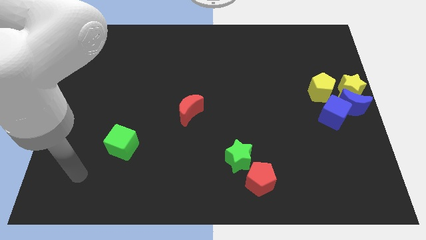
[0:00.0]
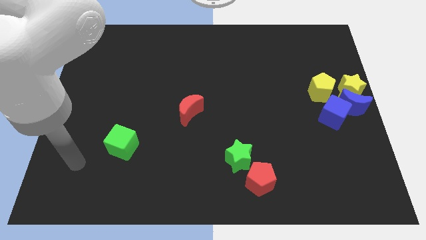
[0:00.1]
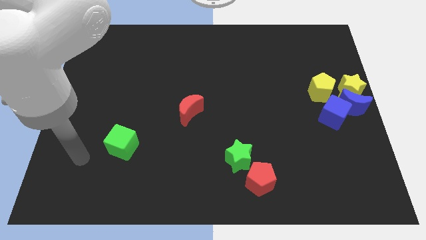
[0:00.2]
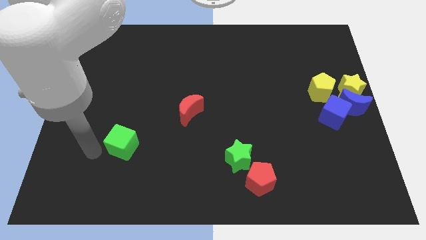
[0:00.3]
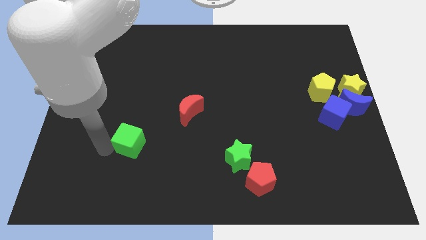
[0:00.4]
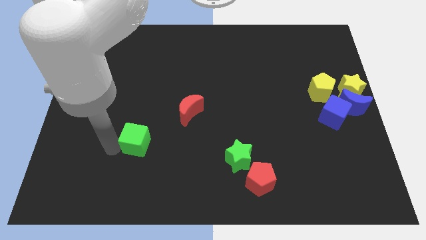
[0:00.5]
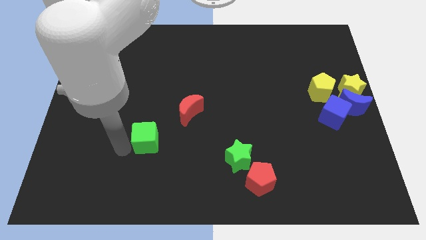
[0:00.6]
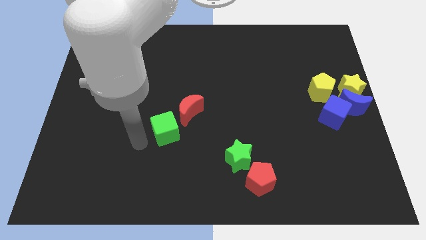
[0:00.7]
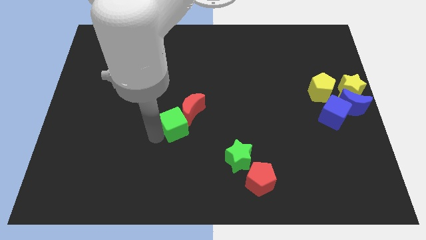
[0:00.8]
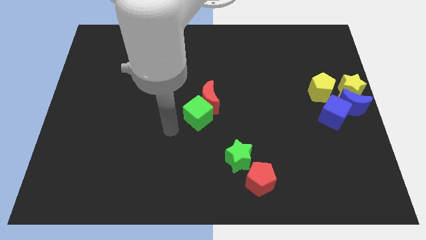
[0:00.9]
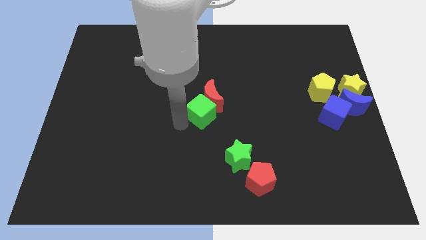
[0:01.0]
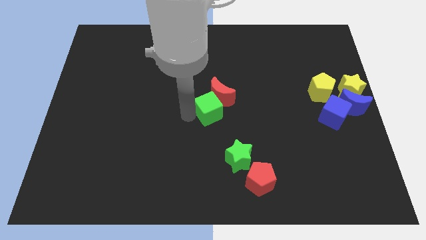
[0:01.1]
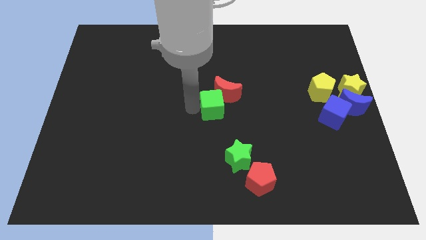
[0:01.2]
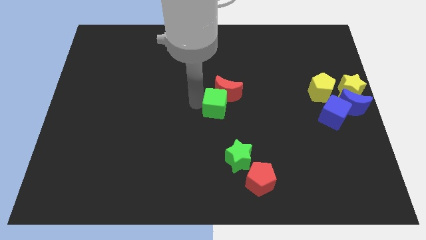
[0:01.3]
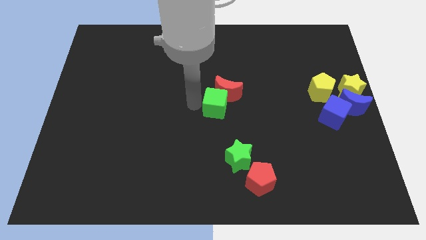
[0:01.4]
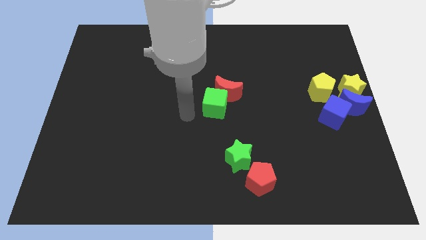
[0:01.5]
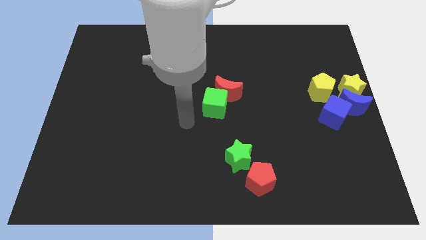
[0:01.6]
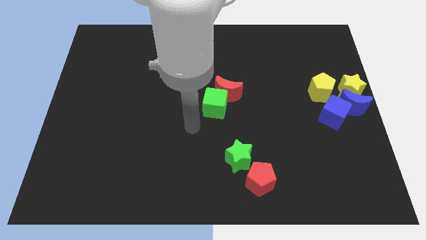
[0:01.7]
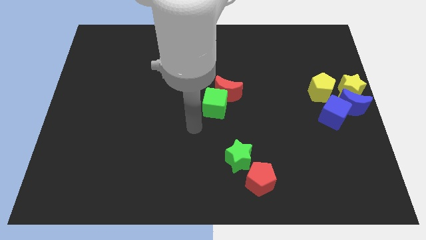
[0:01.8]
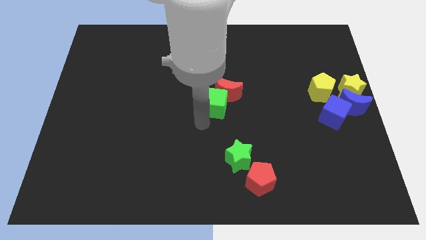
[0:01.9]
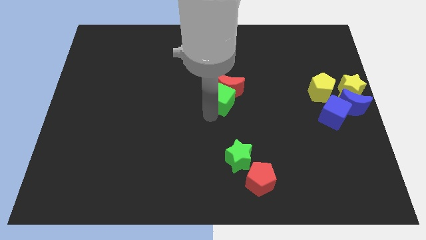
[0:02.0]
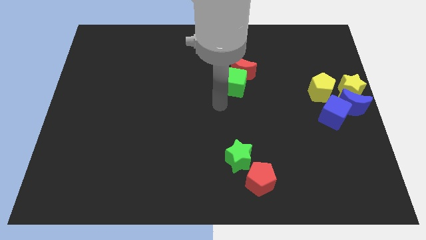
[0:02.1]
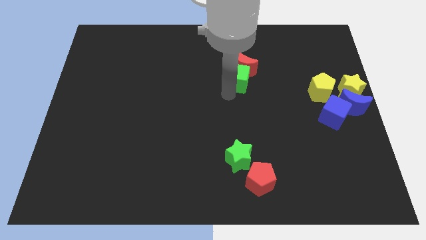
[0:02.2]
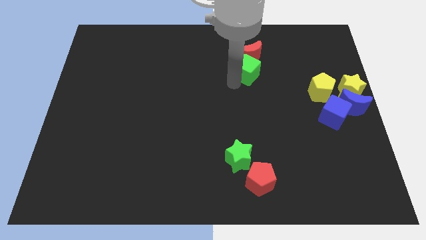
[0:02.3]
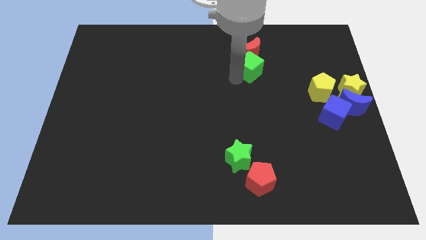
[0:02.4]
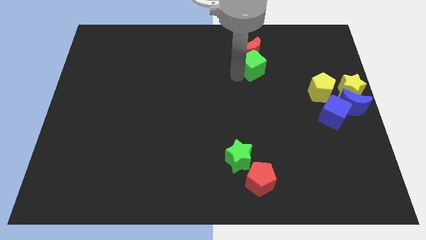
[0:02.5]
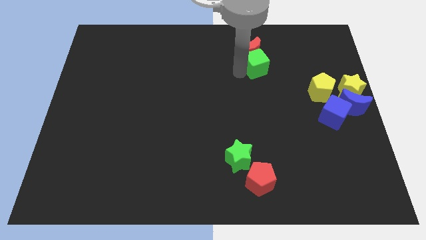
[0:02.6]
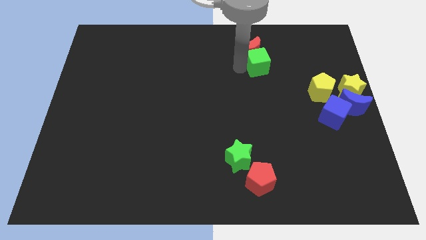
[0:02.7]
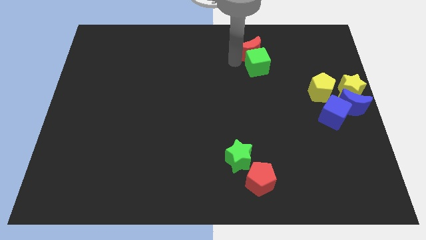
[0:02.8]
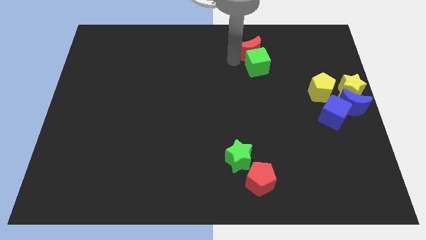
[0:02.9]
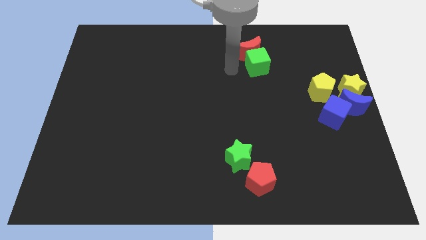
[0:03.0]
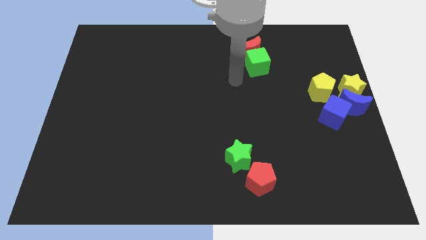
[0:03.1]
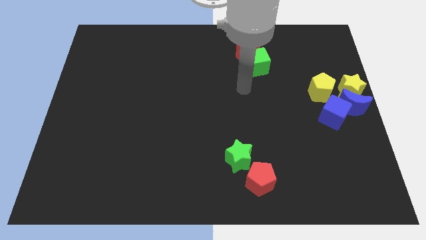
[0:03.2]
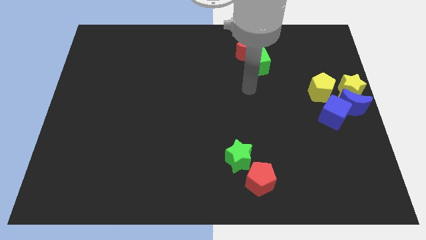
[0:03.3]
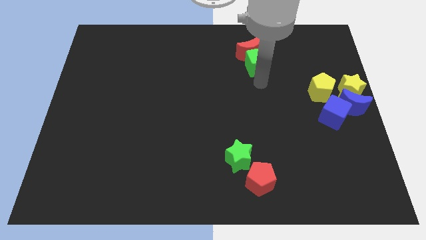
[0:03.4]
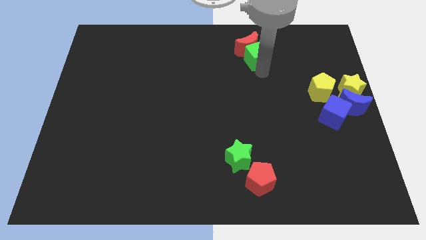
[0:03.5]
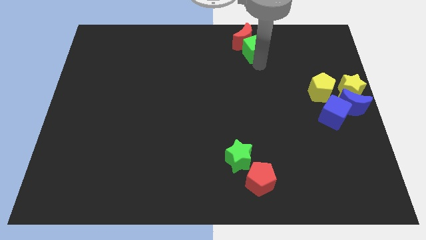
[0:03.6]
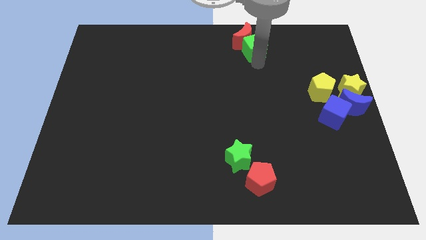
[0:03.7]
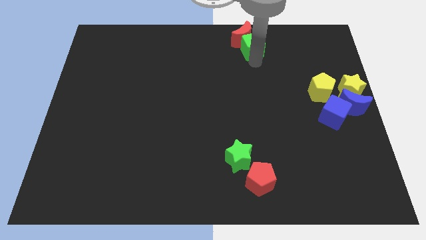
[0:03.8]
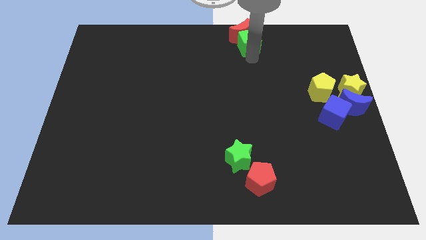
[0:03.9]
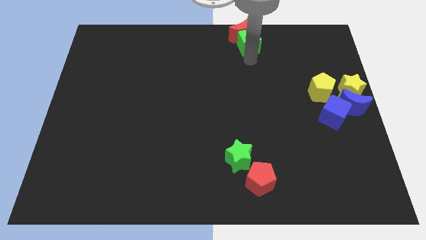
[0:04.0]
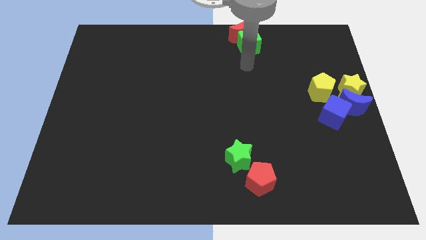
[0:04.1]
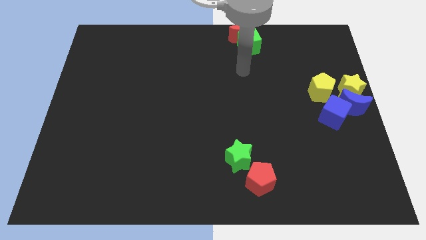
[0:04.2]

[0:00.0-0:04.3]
slide the green cube along with the red moon to the top right side of the board

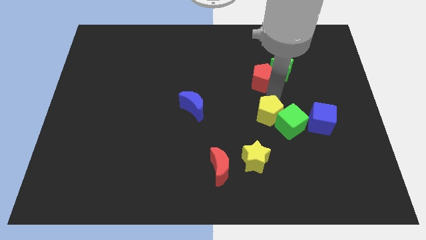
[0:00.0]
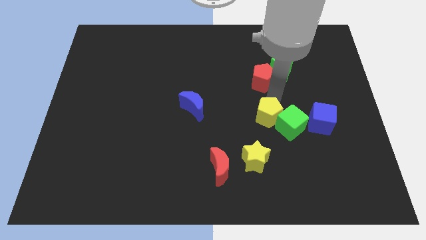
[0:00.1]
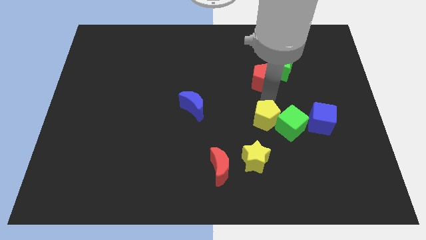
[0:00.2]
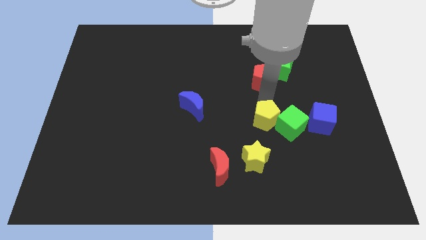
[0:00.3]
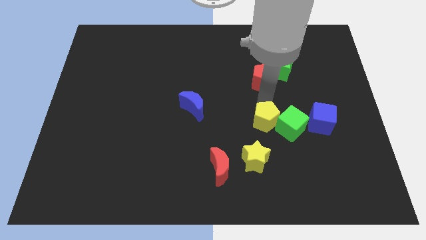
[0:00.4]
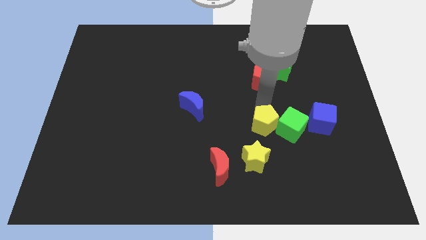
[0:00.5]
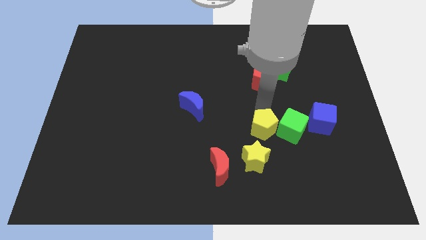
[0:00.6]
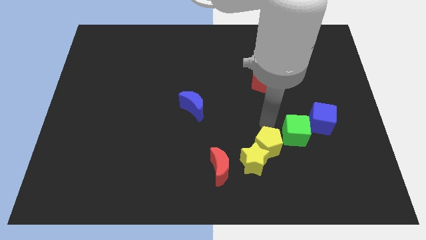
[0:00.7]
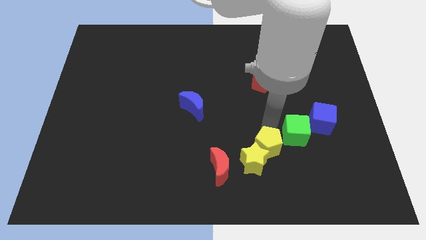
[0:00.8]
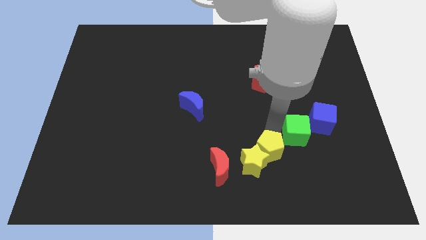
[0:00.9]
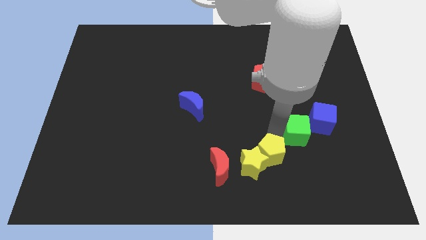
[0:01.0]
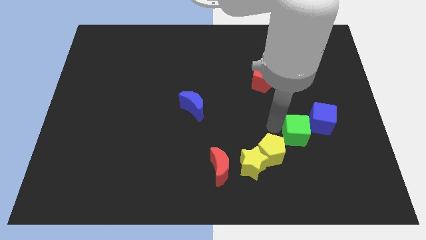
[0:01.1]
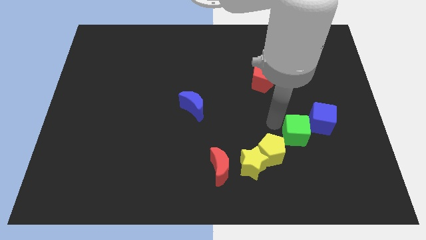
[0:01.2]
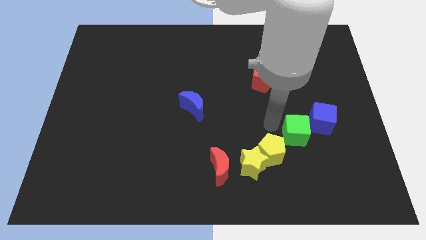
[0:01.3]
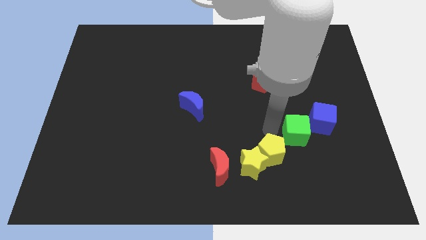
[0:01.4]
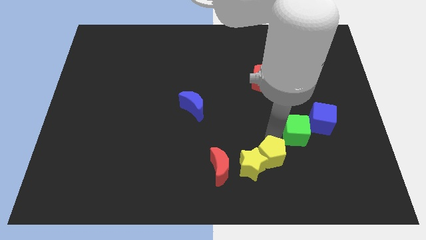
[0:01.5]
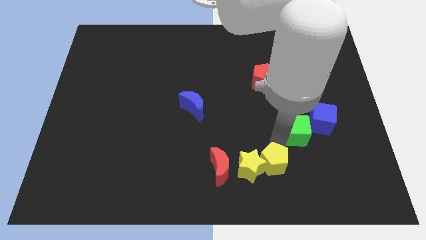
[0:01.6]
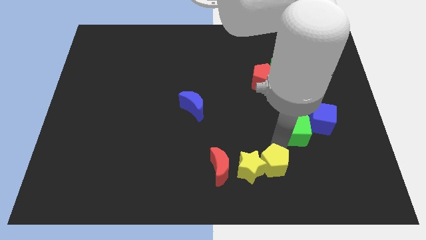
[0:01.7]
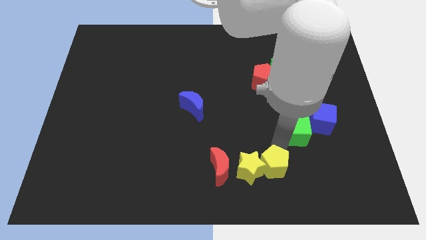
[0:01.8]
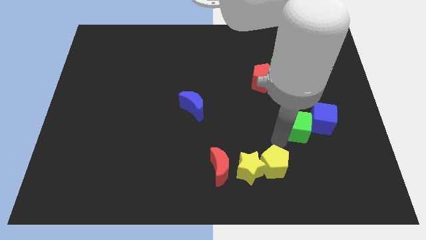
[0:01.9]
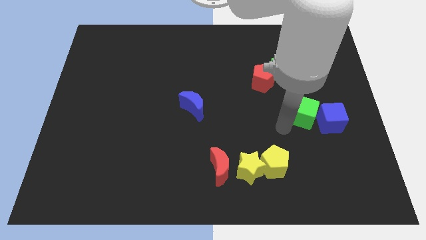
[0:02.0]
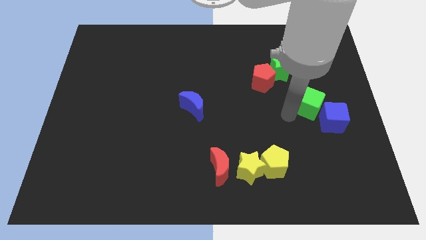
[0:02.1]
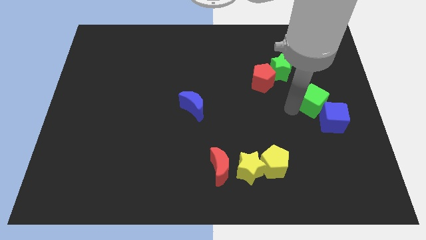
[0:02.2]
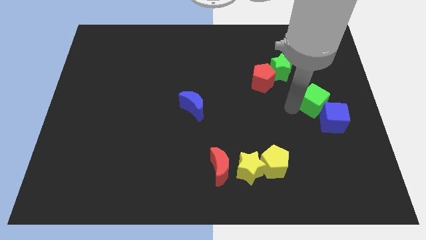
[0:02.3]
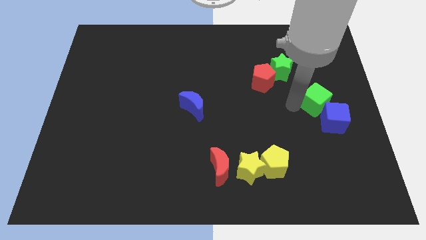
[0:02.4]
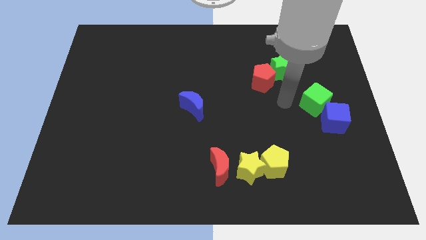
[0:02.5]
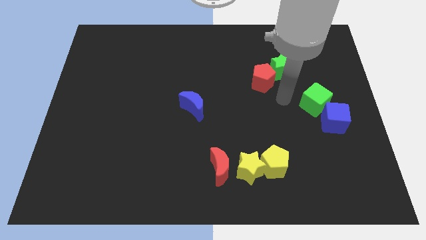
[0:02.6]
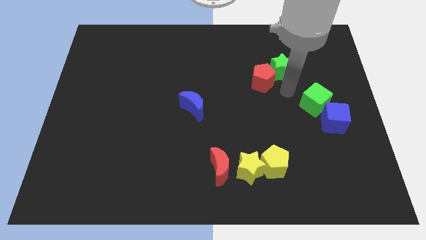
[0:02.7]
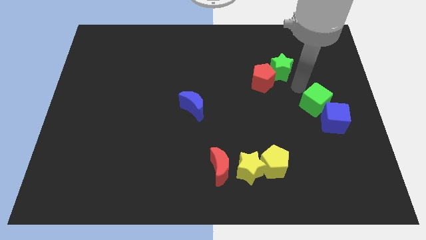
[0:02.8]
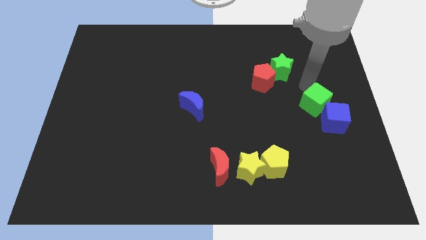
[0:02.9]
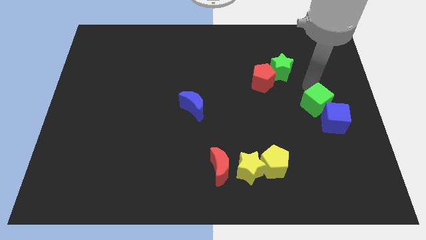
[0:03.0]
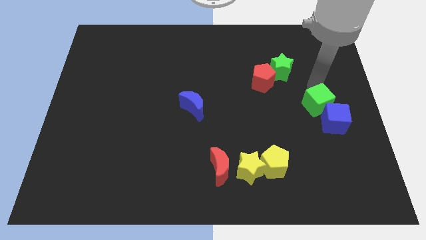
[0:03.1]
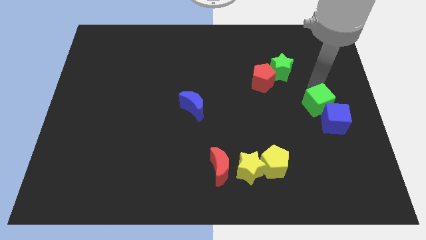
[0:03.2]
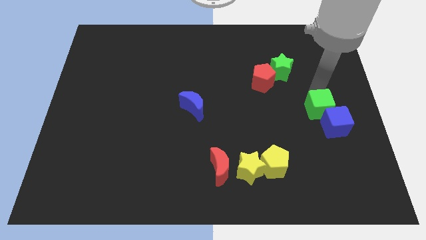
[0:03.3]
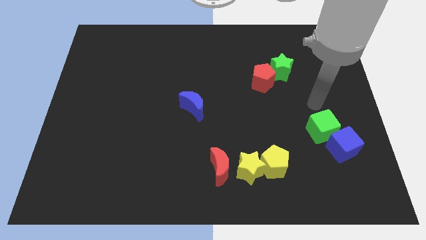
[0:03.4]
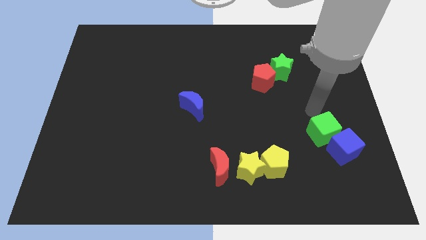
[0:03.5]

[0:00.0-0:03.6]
push the green cube into the blue cube

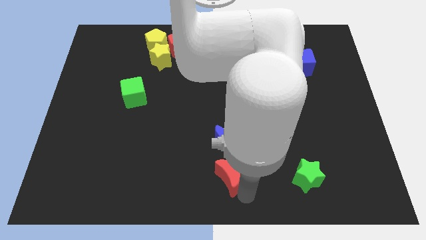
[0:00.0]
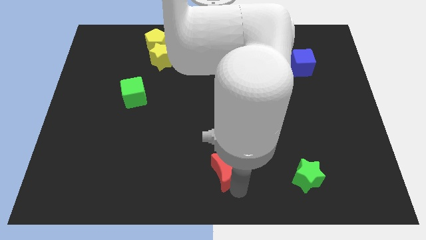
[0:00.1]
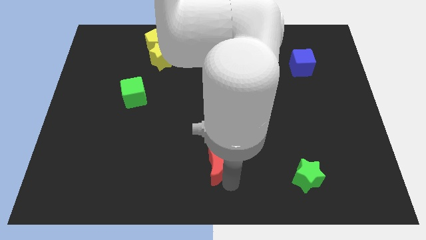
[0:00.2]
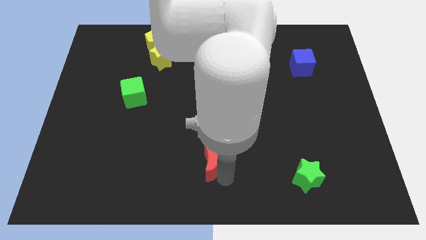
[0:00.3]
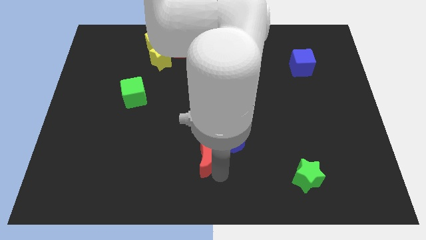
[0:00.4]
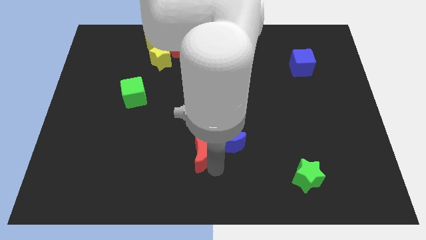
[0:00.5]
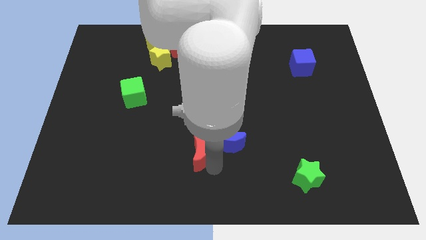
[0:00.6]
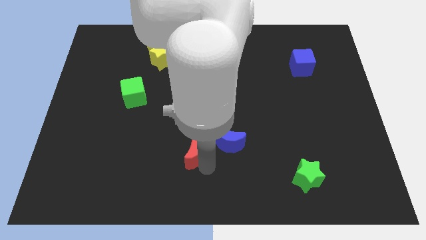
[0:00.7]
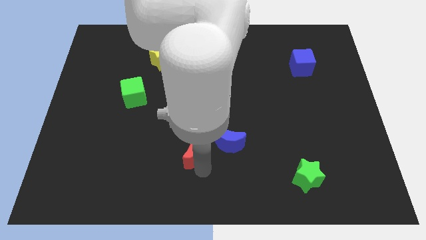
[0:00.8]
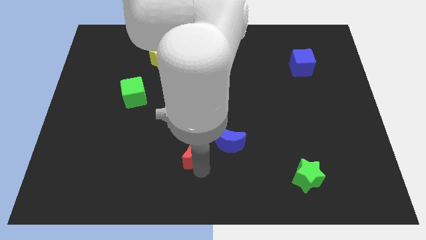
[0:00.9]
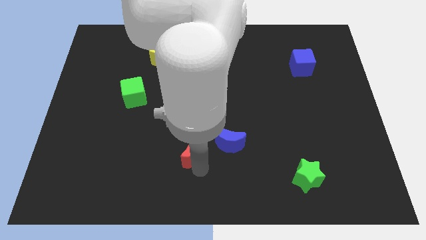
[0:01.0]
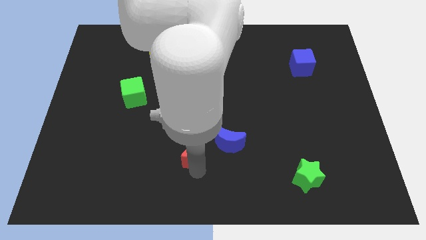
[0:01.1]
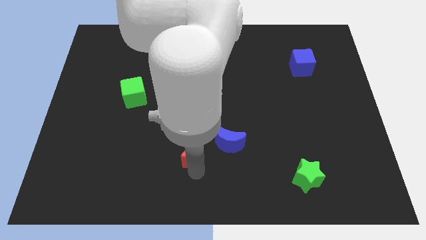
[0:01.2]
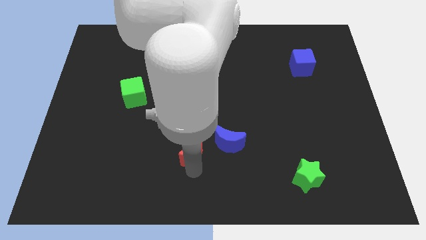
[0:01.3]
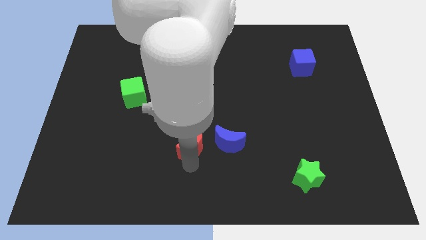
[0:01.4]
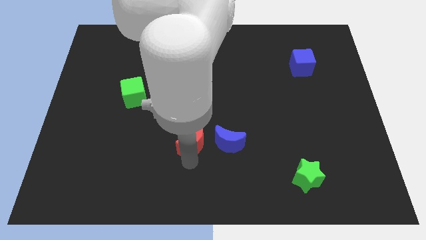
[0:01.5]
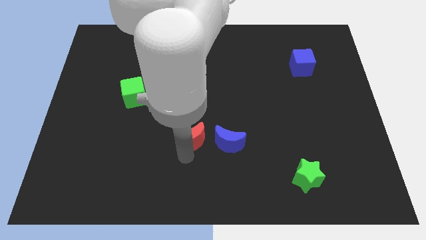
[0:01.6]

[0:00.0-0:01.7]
move the red crescent parallel left to the blue moon
